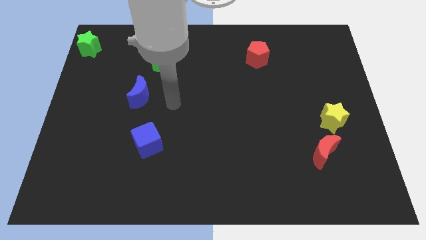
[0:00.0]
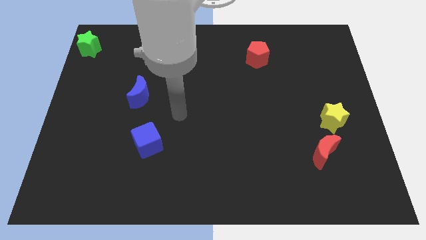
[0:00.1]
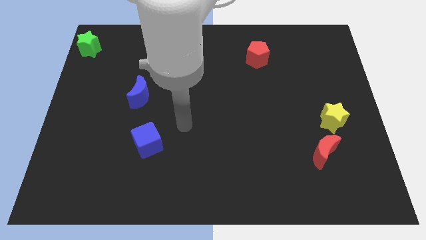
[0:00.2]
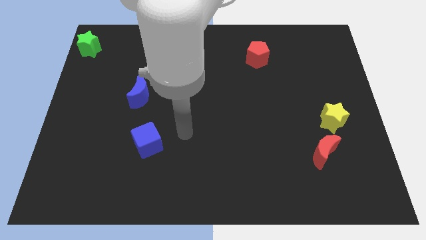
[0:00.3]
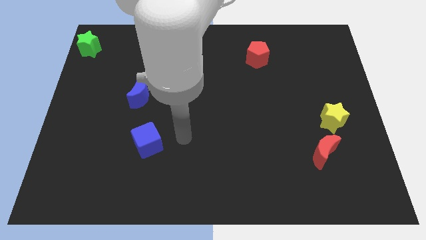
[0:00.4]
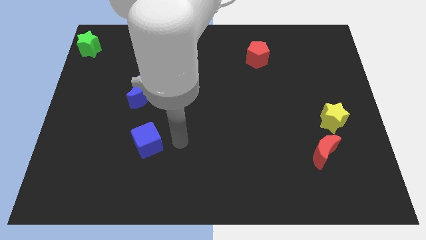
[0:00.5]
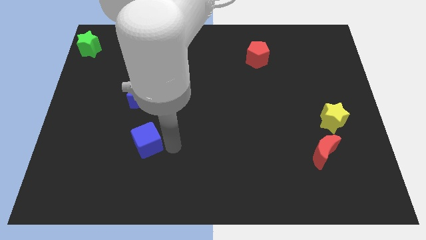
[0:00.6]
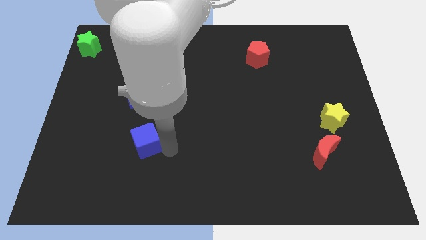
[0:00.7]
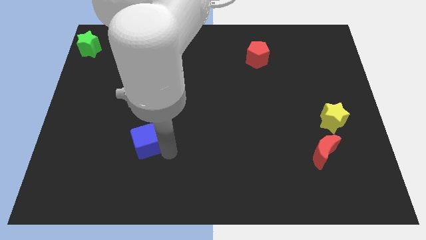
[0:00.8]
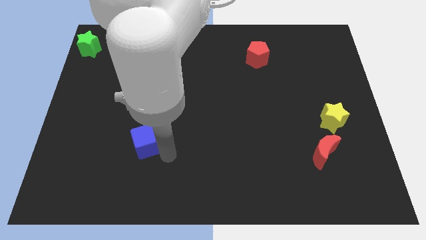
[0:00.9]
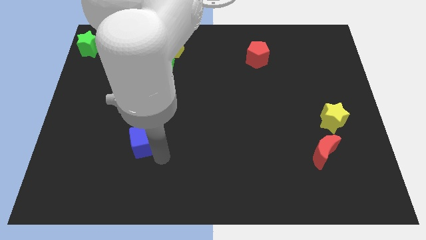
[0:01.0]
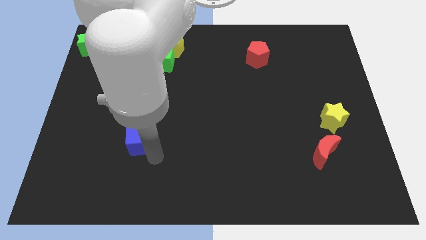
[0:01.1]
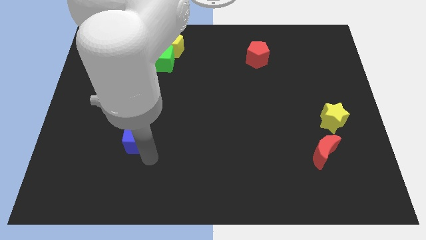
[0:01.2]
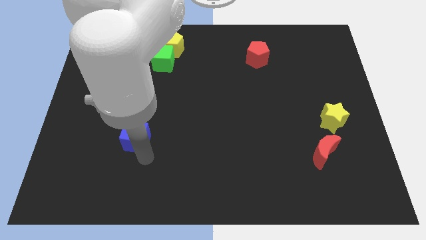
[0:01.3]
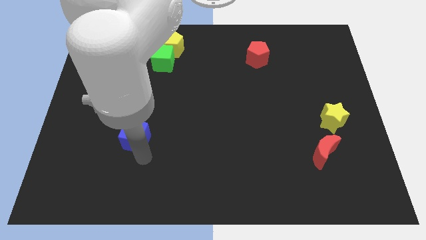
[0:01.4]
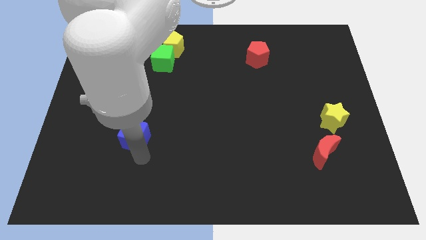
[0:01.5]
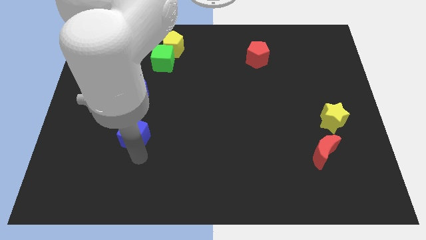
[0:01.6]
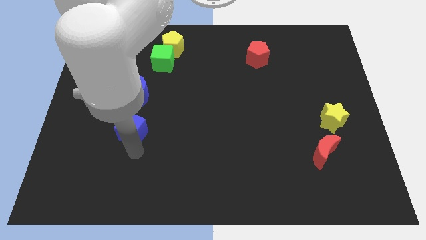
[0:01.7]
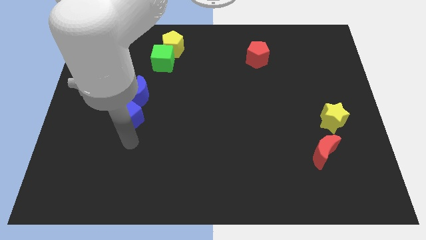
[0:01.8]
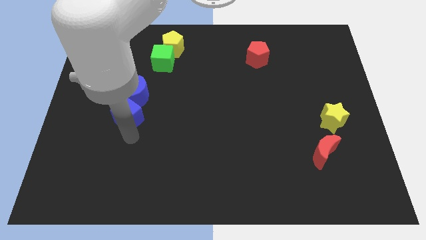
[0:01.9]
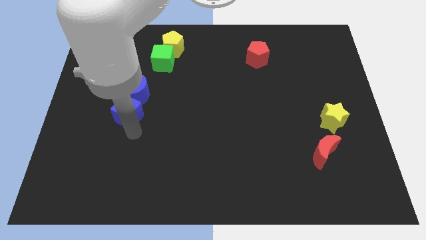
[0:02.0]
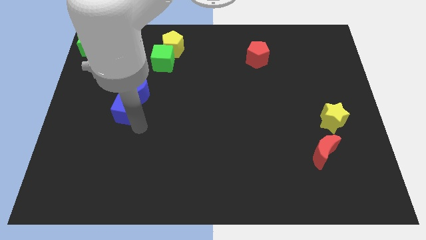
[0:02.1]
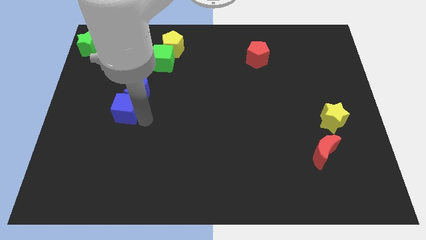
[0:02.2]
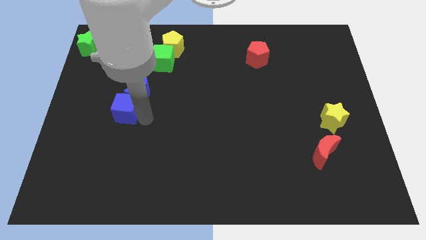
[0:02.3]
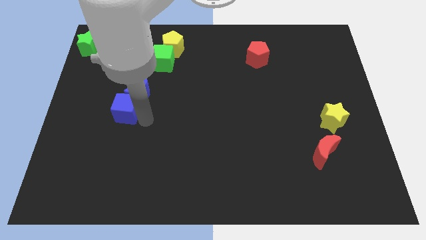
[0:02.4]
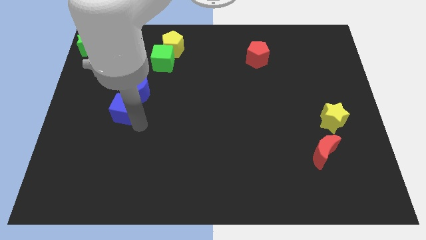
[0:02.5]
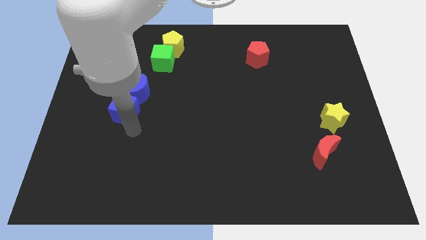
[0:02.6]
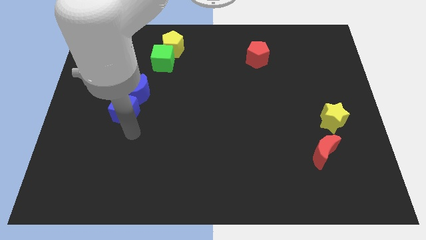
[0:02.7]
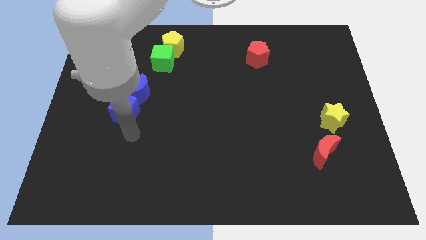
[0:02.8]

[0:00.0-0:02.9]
push the blue cube into the blue crescent

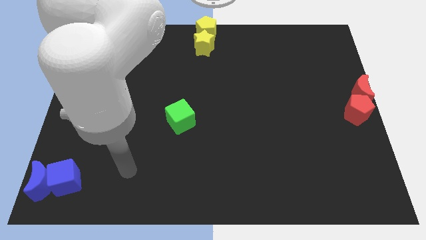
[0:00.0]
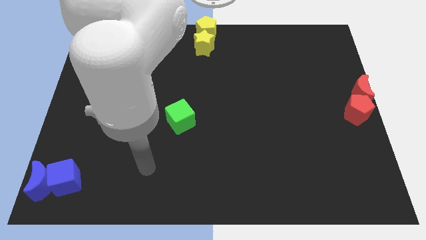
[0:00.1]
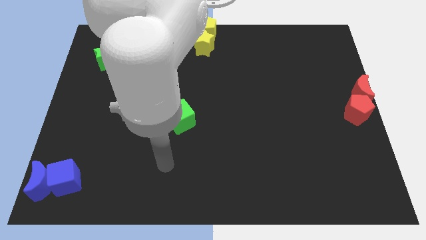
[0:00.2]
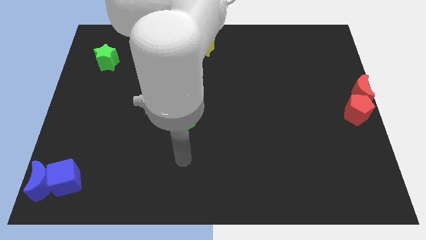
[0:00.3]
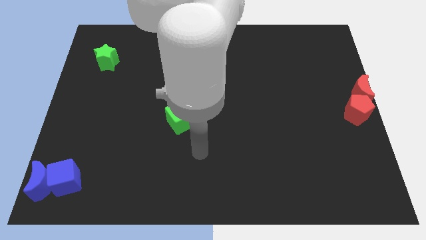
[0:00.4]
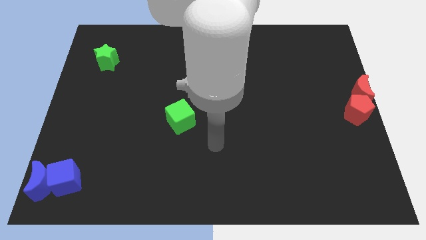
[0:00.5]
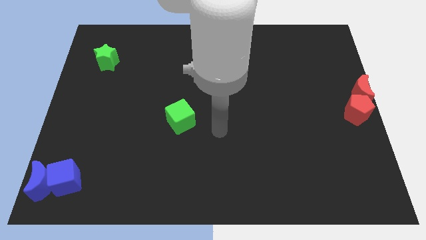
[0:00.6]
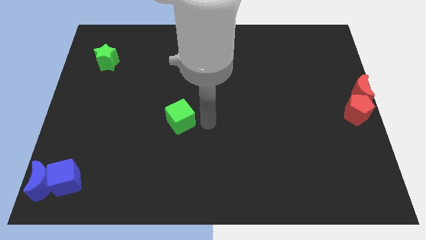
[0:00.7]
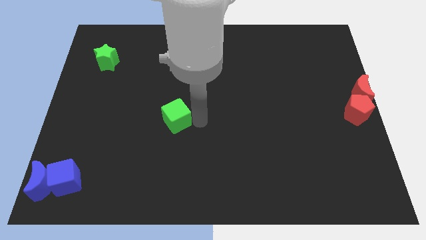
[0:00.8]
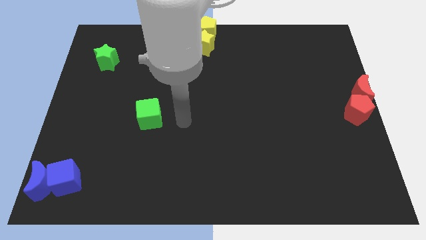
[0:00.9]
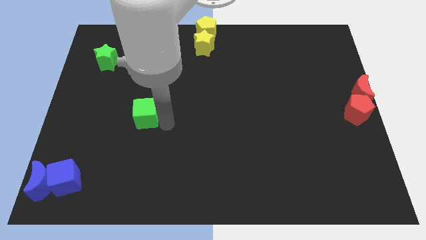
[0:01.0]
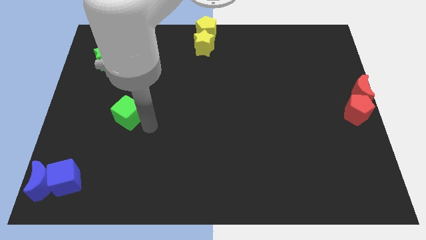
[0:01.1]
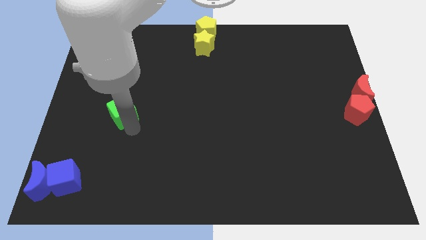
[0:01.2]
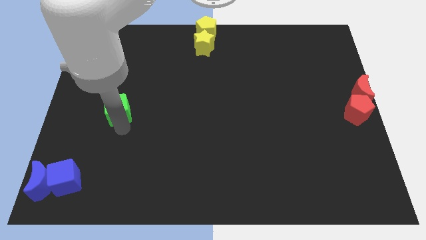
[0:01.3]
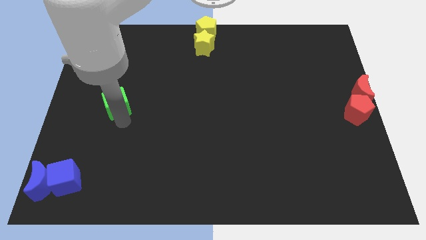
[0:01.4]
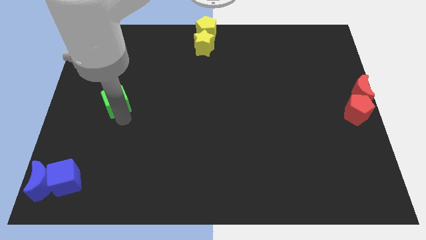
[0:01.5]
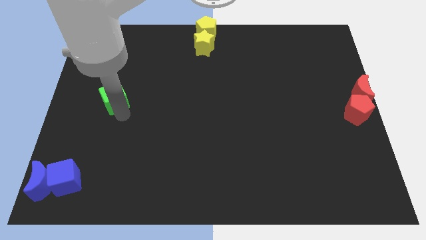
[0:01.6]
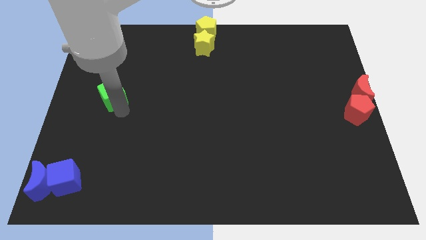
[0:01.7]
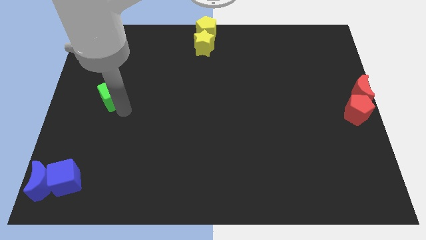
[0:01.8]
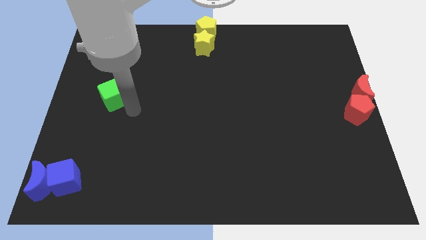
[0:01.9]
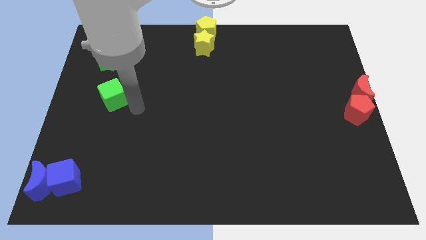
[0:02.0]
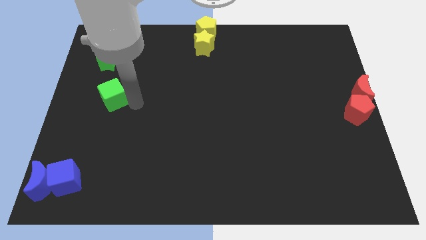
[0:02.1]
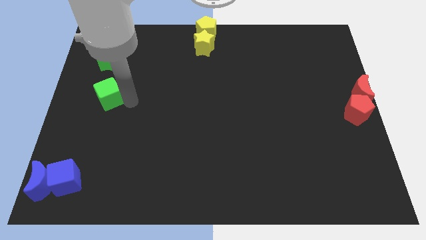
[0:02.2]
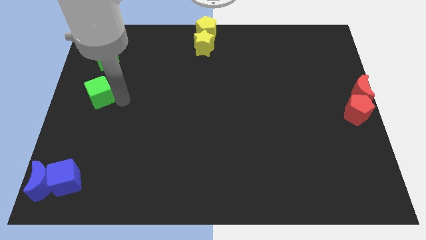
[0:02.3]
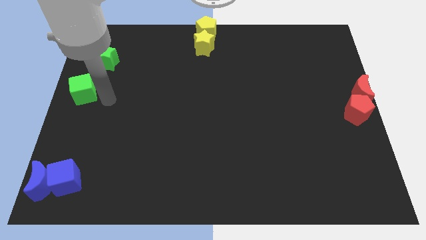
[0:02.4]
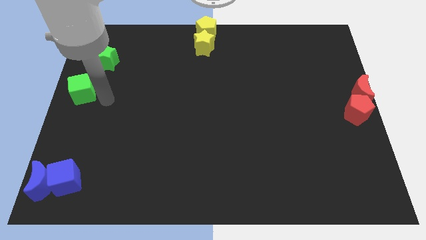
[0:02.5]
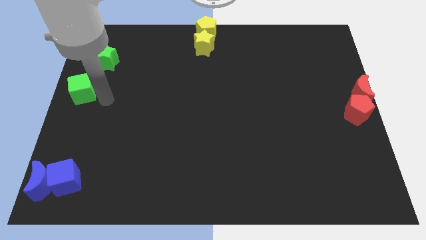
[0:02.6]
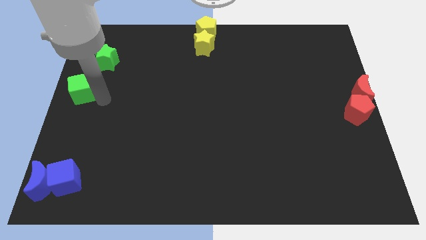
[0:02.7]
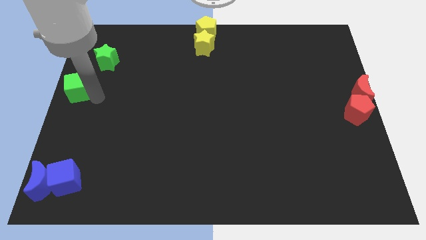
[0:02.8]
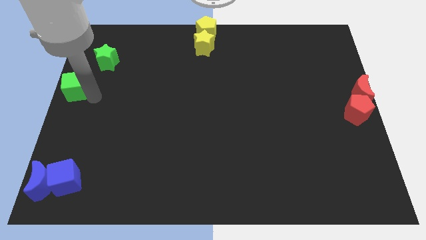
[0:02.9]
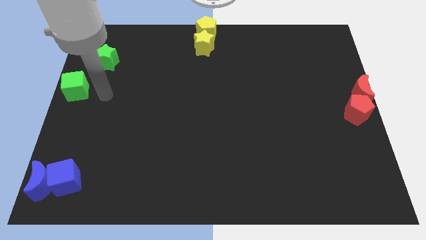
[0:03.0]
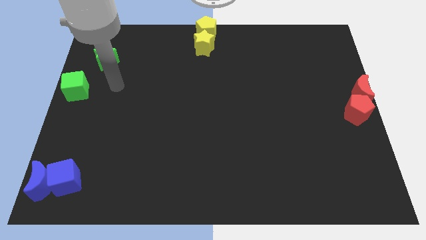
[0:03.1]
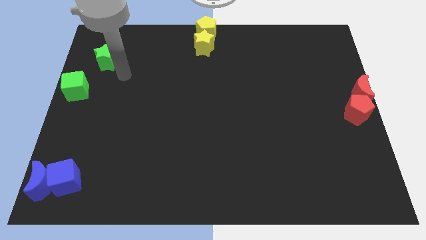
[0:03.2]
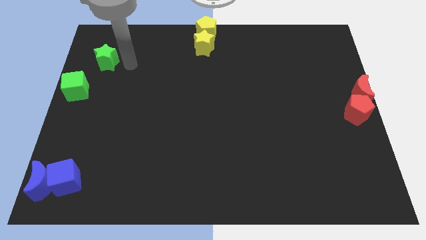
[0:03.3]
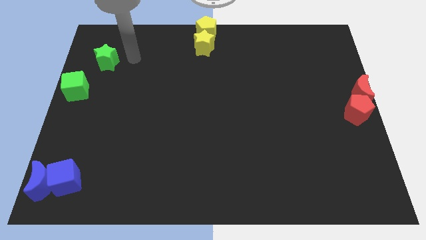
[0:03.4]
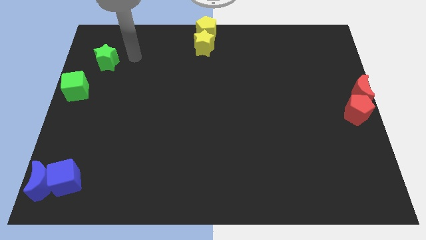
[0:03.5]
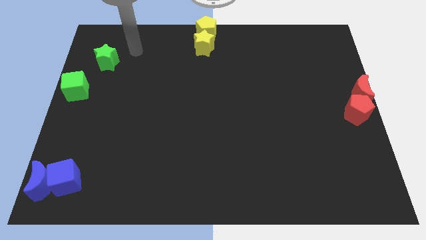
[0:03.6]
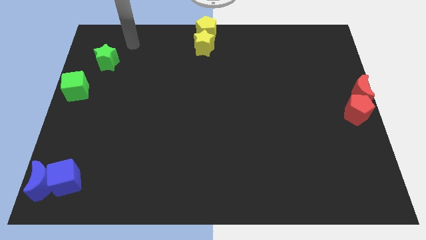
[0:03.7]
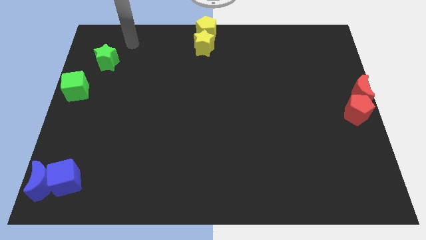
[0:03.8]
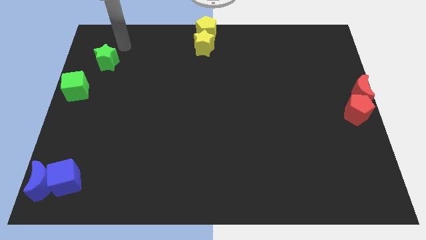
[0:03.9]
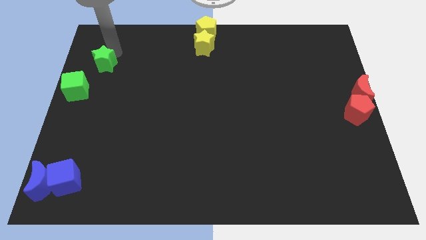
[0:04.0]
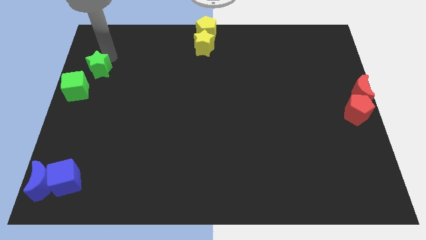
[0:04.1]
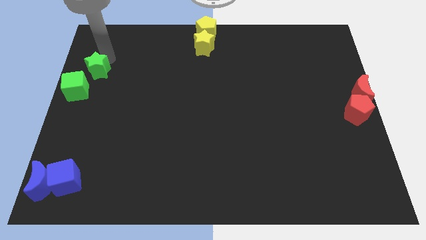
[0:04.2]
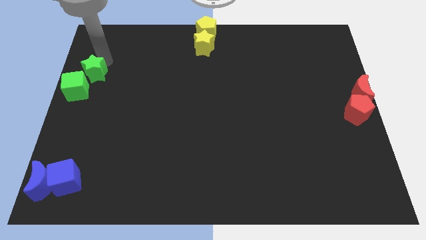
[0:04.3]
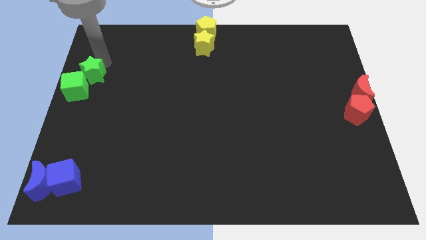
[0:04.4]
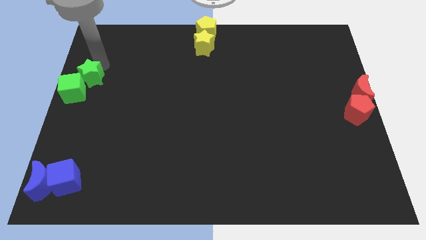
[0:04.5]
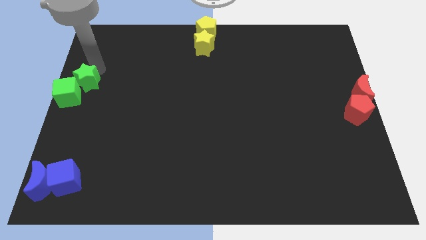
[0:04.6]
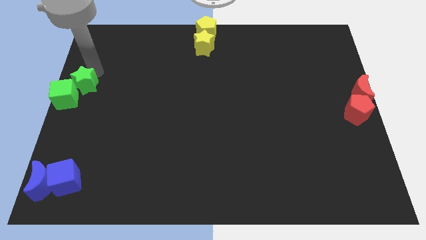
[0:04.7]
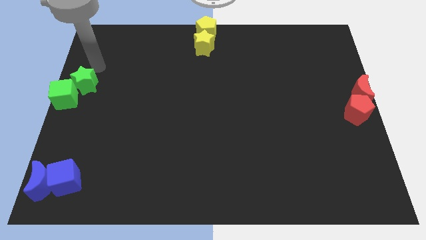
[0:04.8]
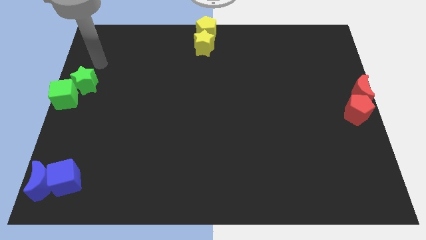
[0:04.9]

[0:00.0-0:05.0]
push the green cube and green star at the center left of the board

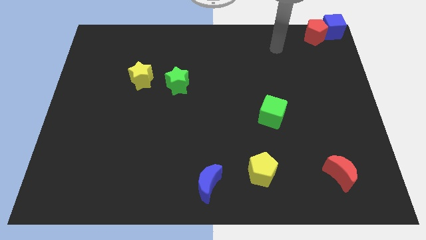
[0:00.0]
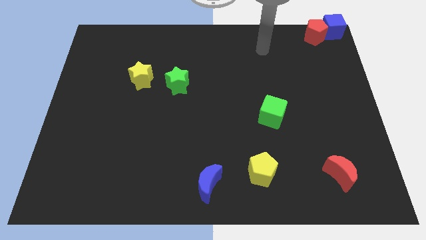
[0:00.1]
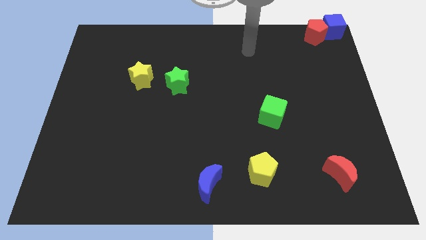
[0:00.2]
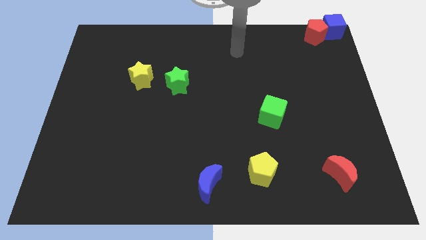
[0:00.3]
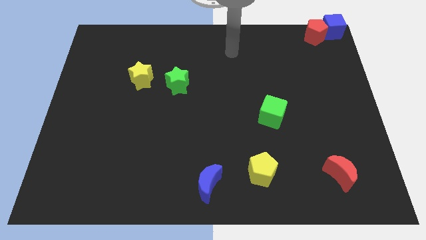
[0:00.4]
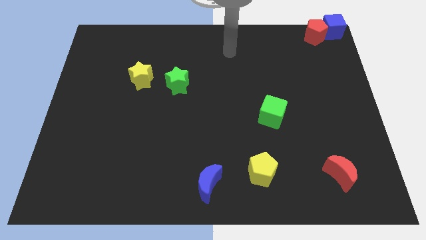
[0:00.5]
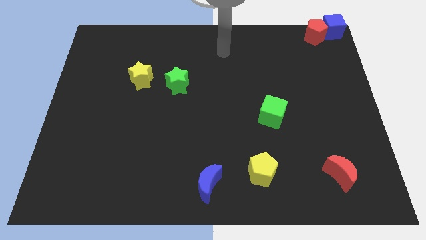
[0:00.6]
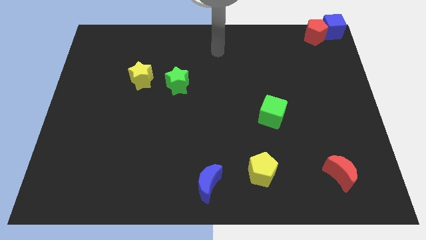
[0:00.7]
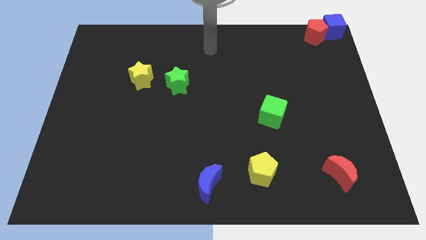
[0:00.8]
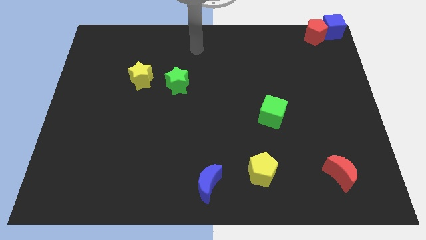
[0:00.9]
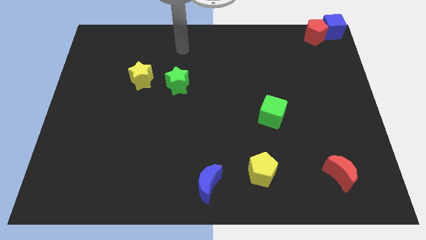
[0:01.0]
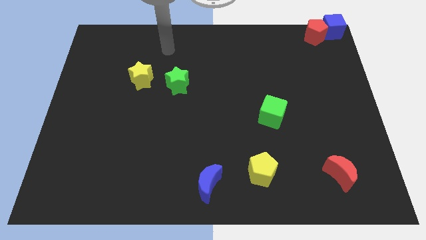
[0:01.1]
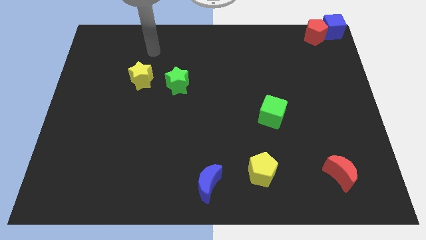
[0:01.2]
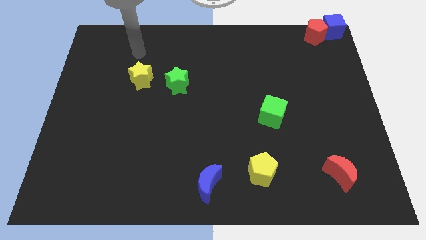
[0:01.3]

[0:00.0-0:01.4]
move your arm to the top of yellow star
